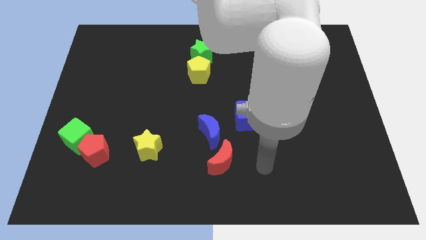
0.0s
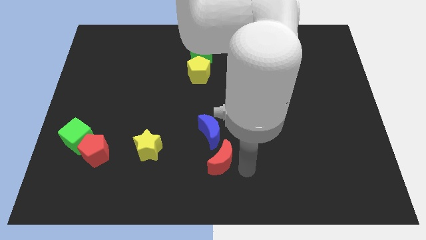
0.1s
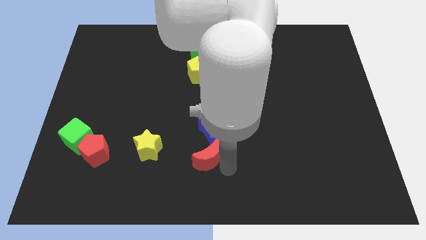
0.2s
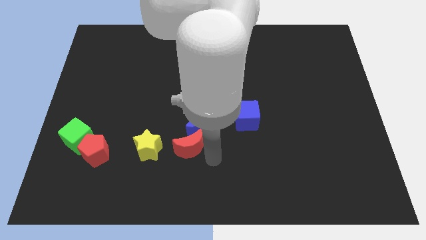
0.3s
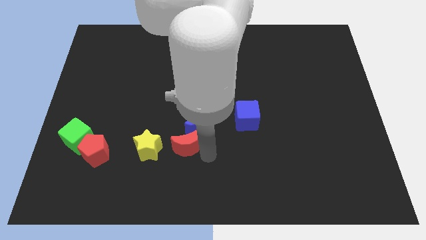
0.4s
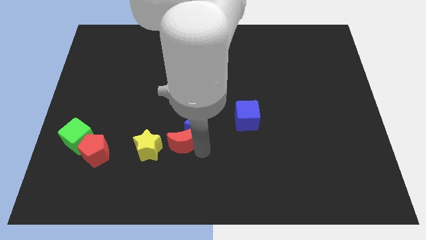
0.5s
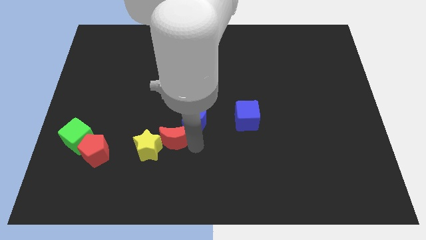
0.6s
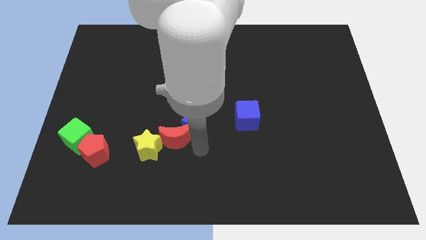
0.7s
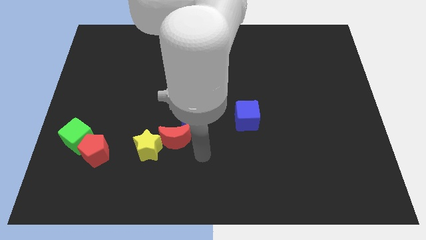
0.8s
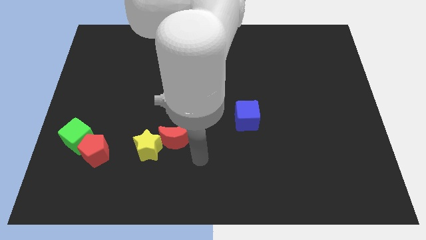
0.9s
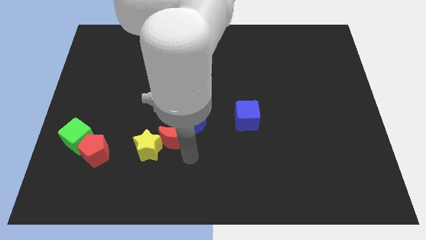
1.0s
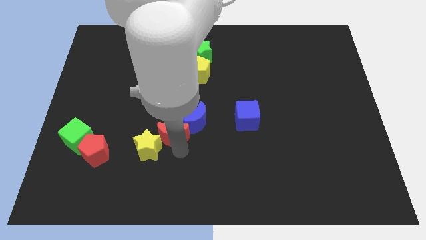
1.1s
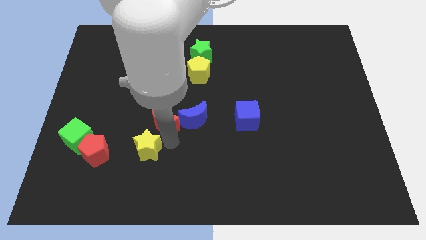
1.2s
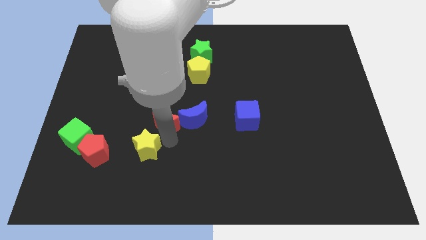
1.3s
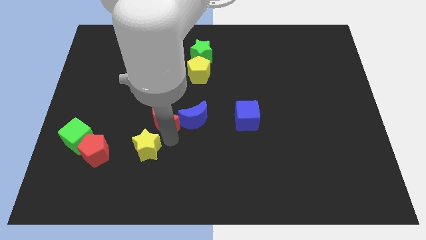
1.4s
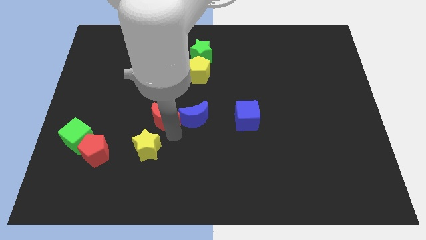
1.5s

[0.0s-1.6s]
push the red crescent to the bottom of the blue moon

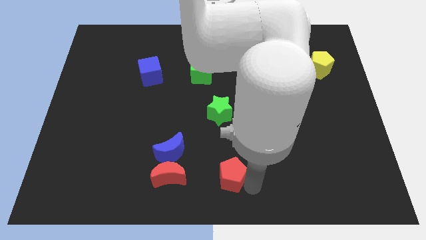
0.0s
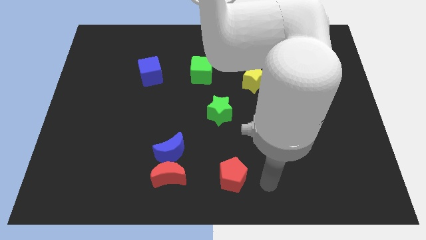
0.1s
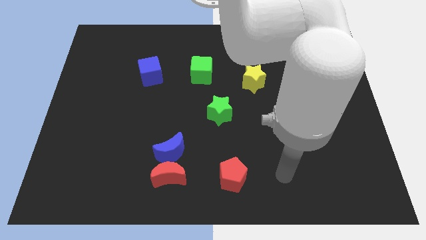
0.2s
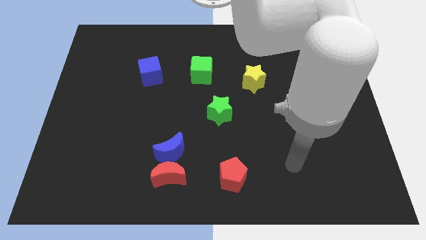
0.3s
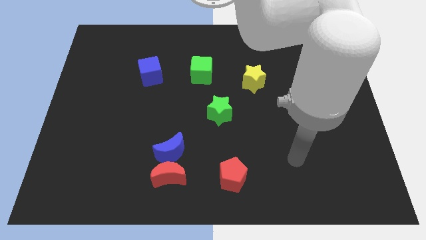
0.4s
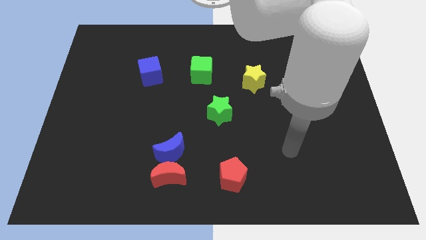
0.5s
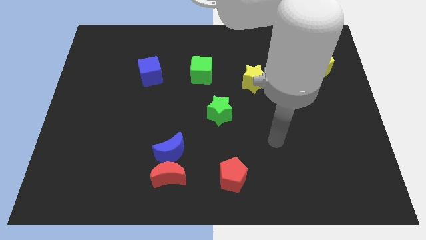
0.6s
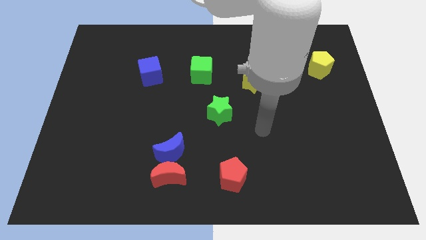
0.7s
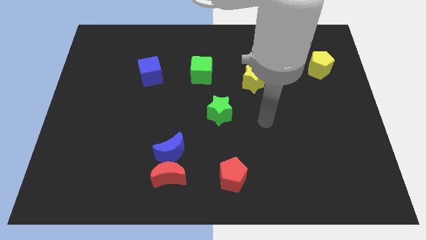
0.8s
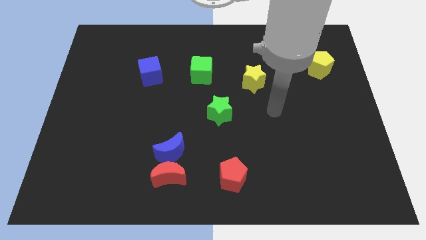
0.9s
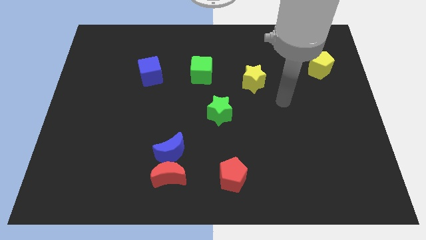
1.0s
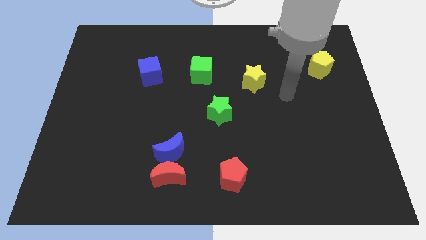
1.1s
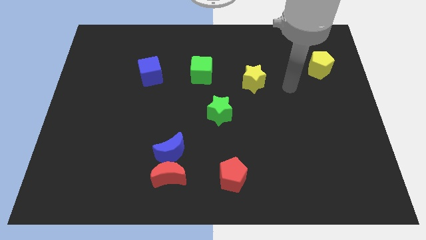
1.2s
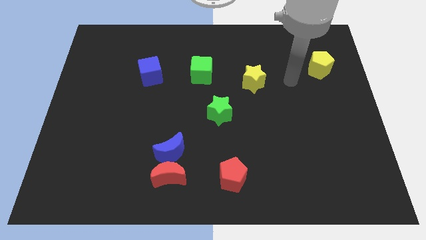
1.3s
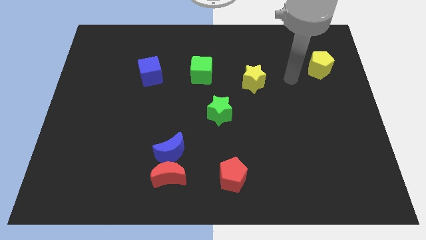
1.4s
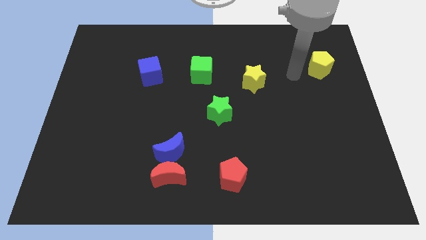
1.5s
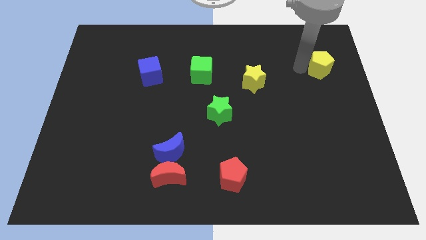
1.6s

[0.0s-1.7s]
move the arm to the left of the yellow pentagon

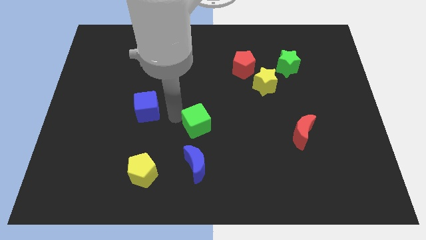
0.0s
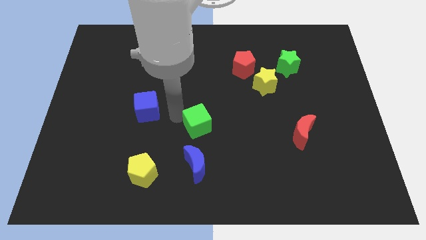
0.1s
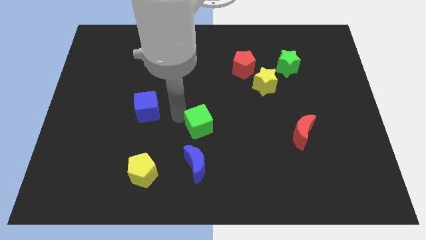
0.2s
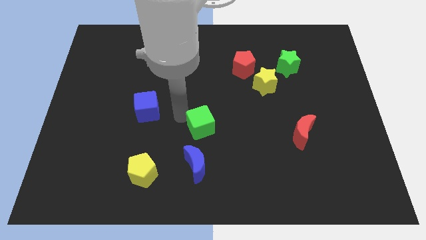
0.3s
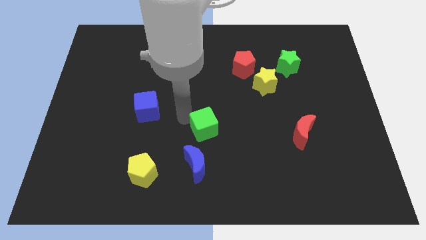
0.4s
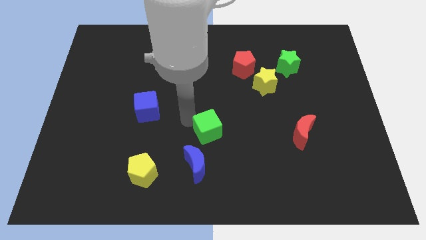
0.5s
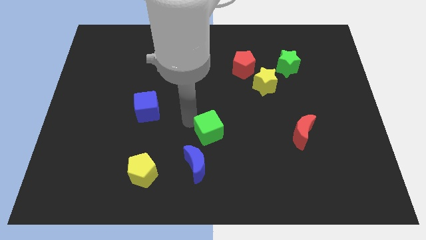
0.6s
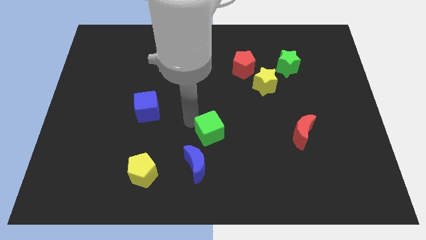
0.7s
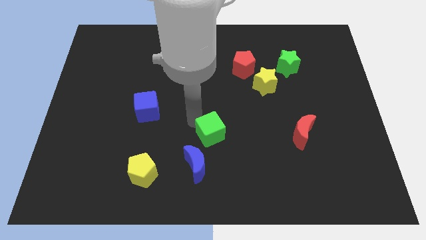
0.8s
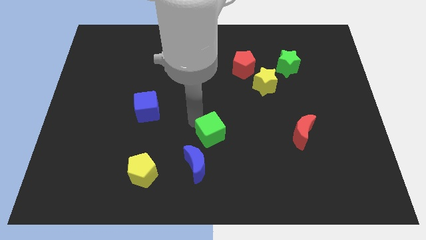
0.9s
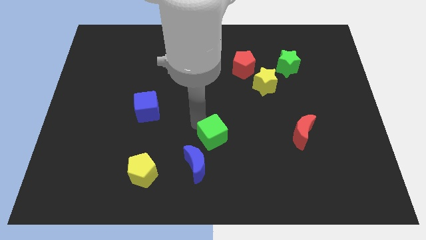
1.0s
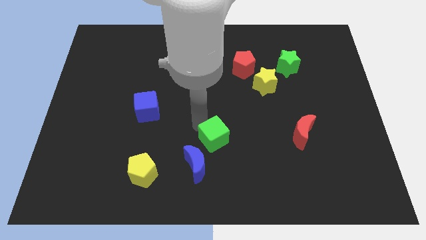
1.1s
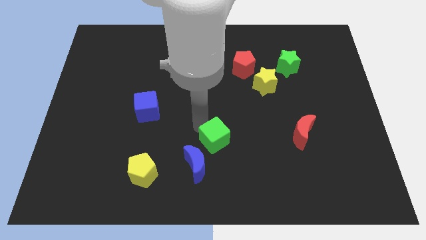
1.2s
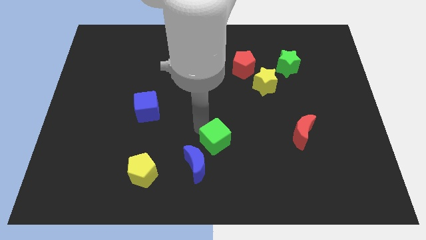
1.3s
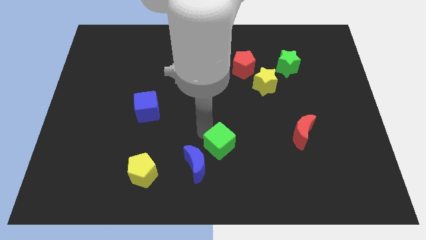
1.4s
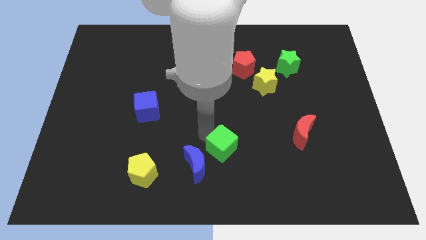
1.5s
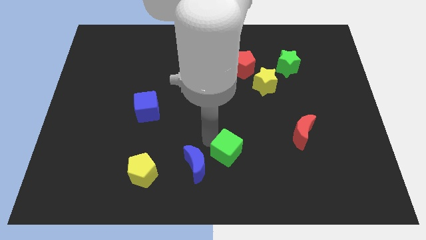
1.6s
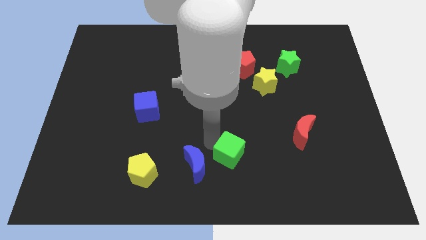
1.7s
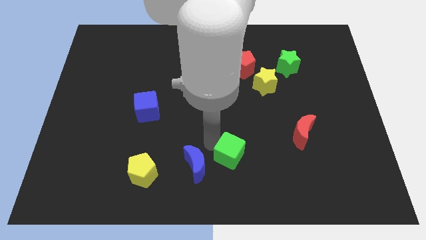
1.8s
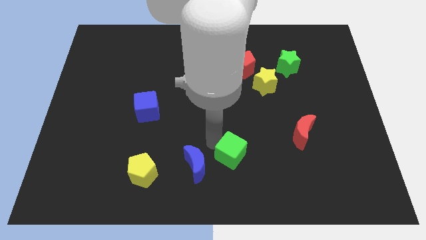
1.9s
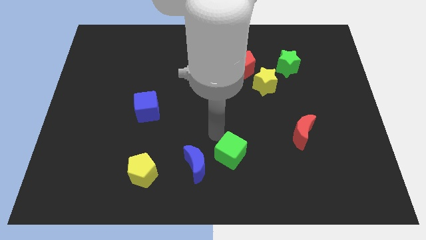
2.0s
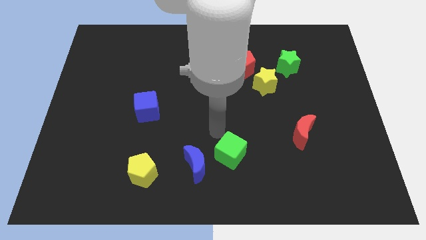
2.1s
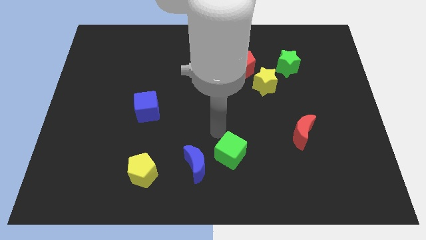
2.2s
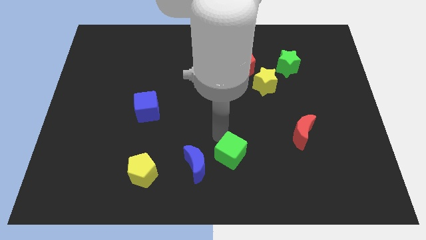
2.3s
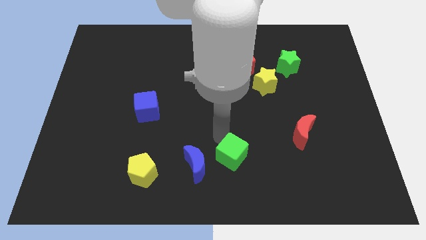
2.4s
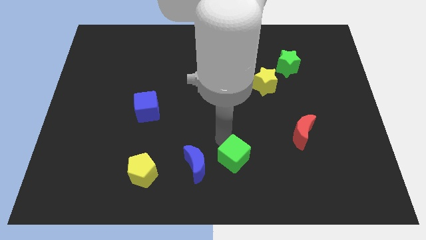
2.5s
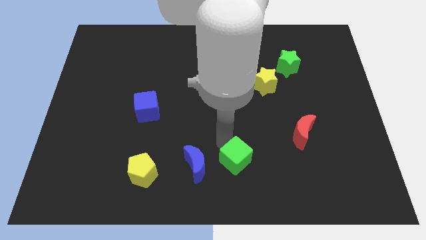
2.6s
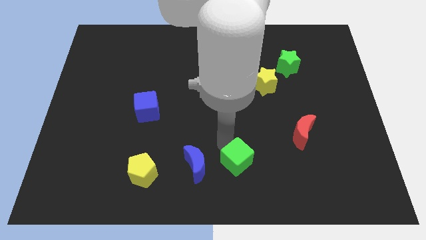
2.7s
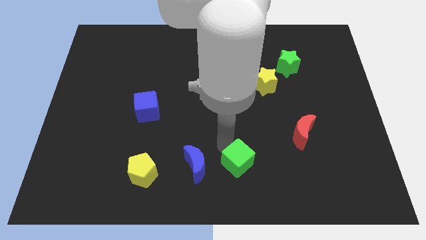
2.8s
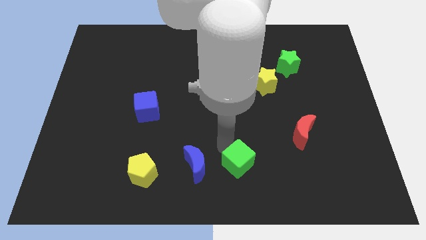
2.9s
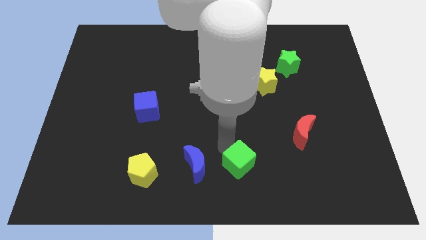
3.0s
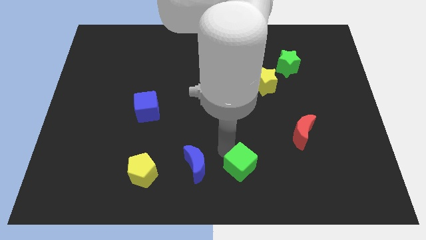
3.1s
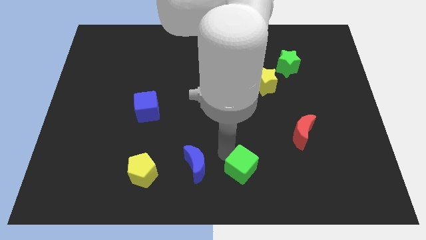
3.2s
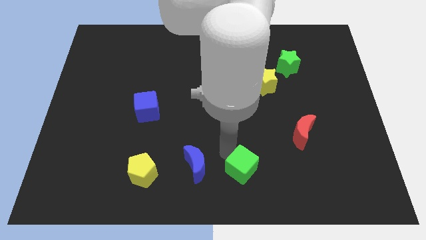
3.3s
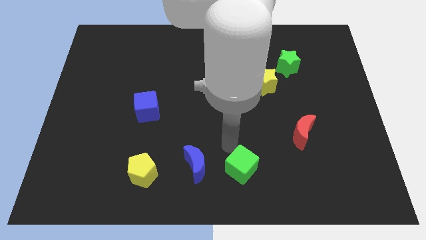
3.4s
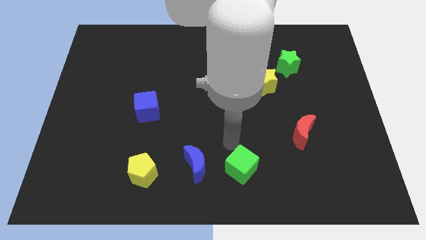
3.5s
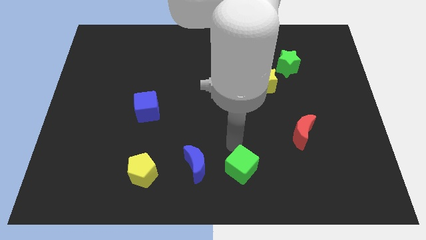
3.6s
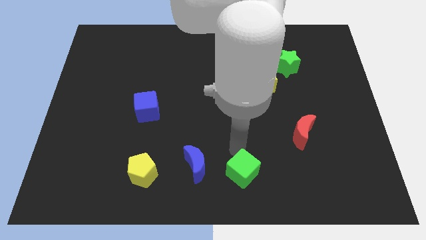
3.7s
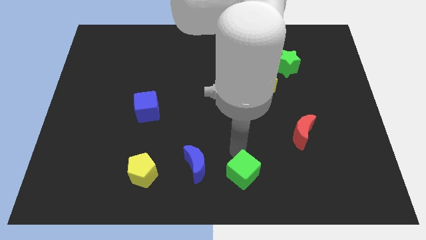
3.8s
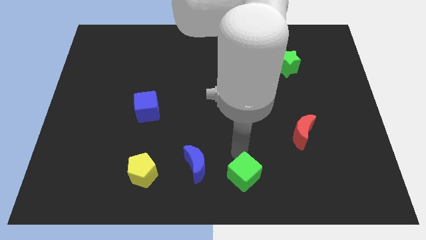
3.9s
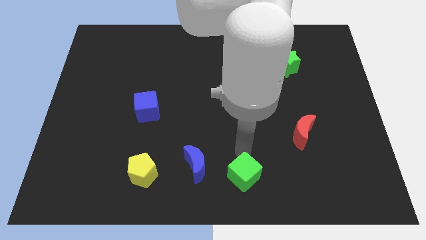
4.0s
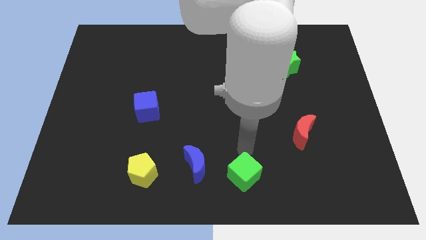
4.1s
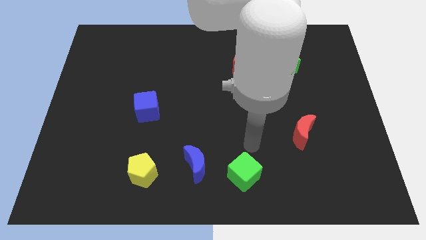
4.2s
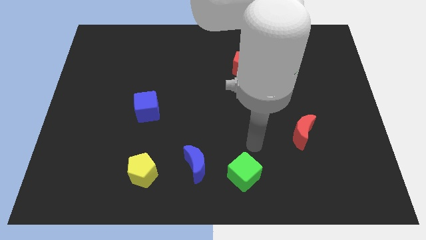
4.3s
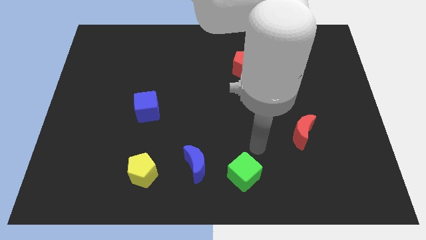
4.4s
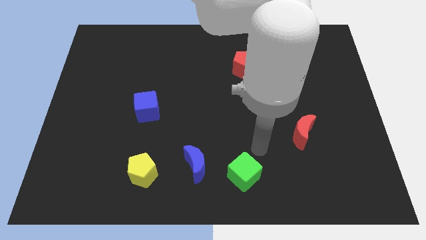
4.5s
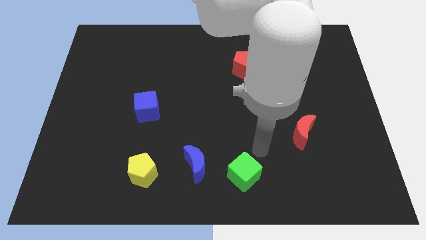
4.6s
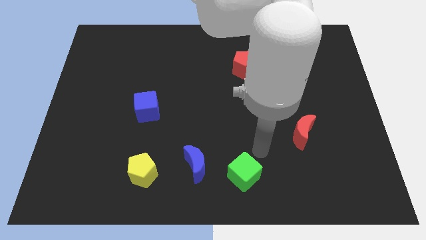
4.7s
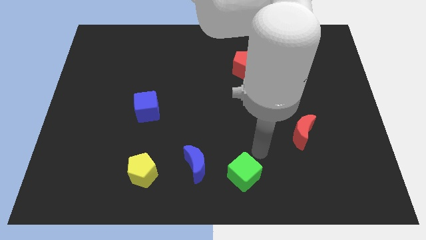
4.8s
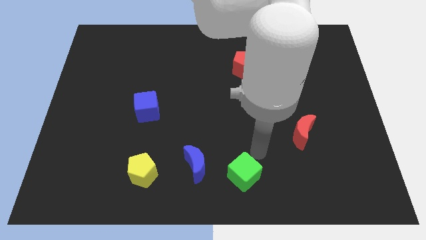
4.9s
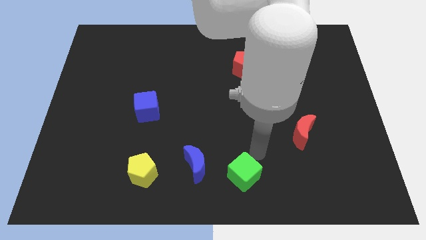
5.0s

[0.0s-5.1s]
push green cube to the right of the blue moon
